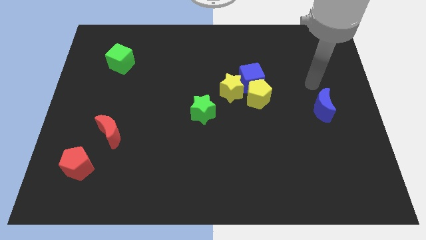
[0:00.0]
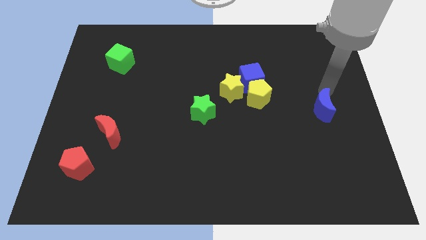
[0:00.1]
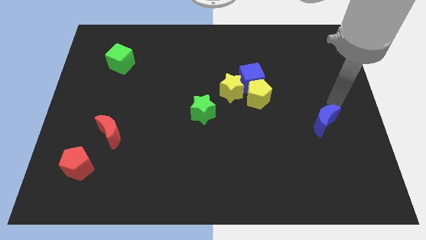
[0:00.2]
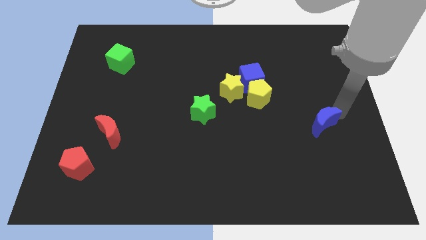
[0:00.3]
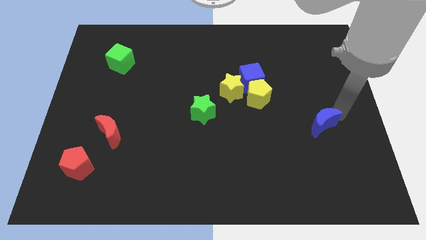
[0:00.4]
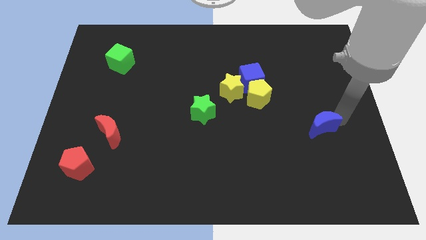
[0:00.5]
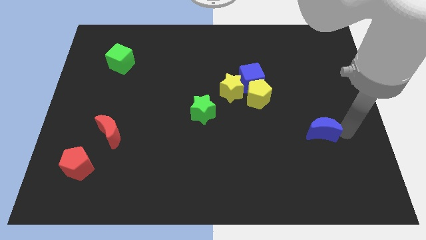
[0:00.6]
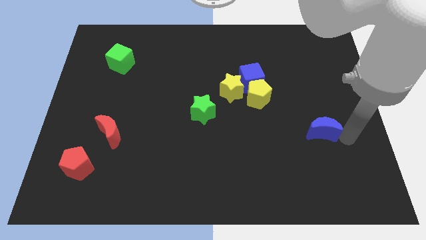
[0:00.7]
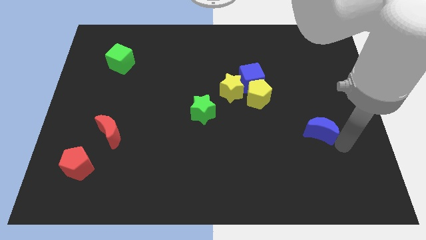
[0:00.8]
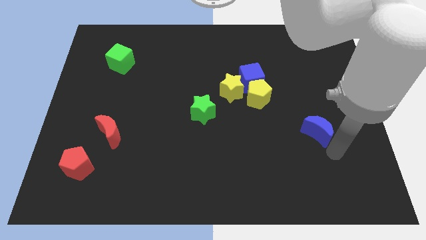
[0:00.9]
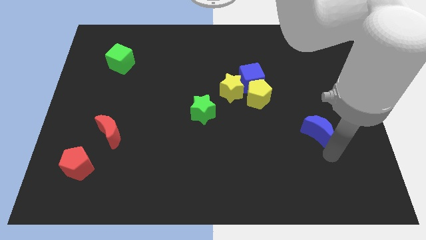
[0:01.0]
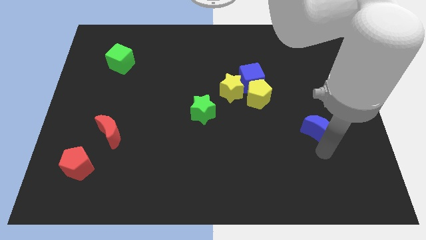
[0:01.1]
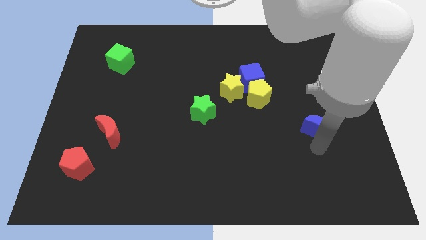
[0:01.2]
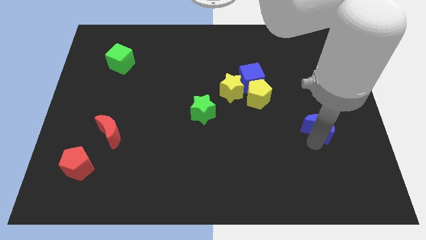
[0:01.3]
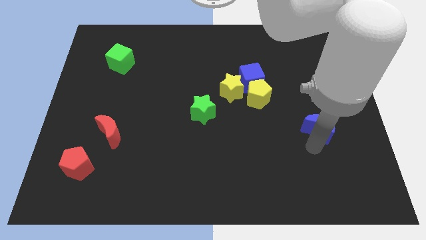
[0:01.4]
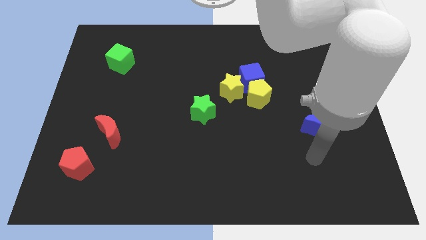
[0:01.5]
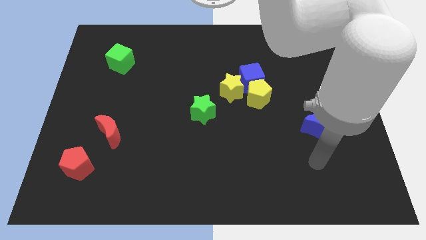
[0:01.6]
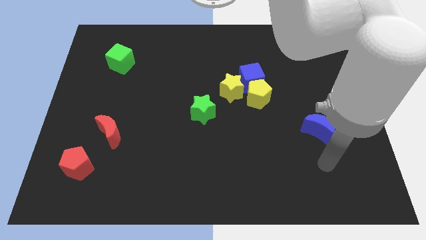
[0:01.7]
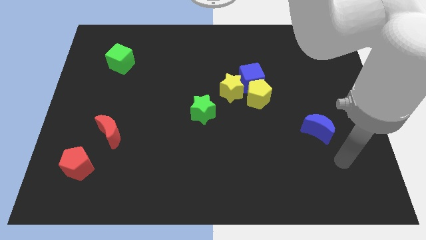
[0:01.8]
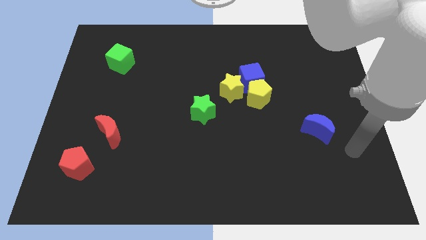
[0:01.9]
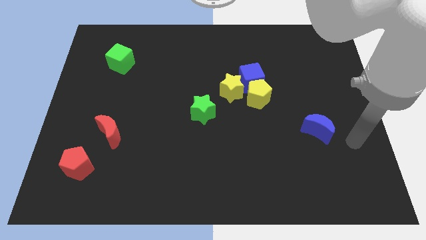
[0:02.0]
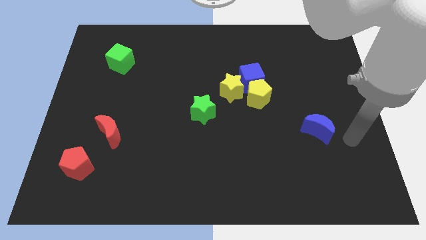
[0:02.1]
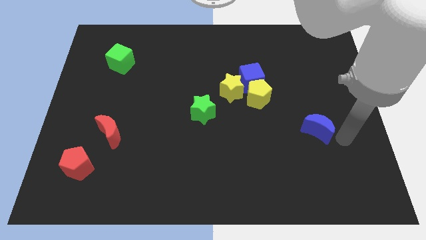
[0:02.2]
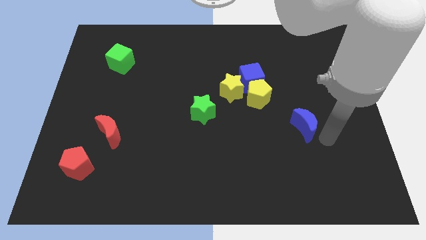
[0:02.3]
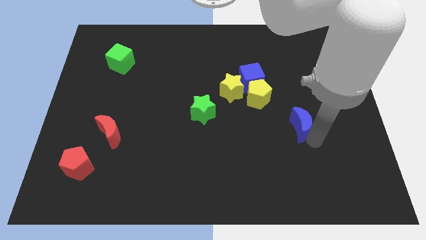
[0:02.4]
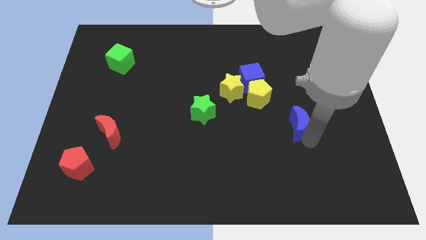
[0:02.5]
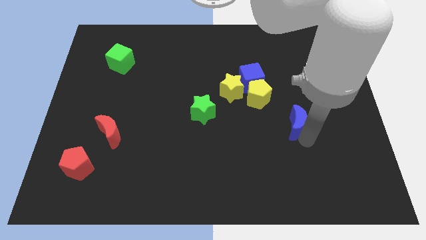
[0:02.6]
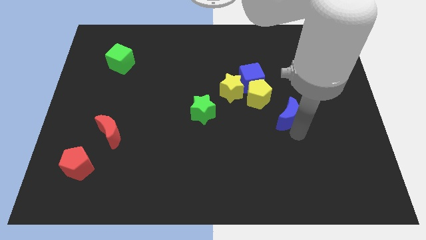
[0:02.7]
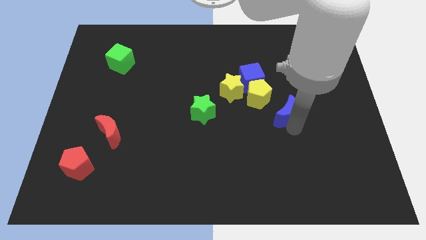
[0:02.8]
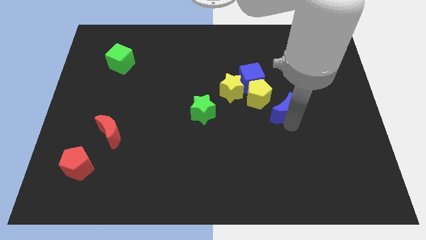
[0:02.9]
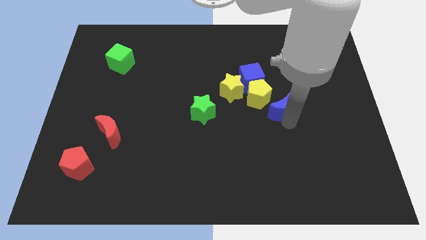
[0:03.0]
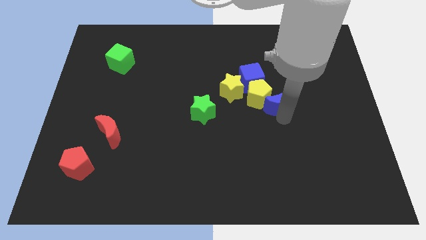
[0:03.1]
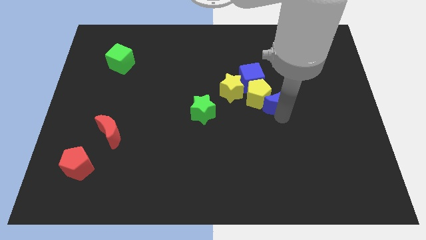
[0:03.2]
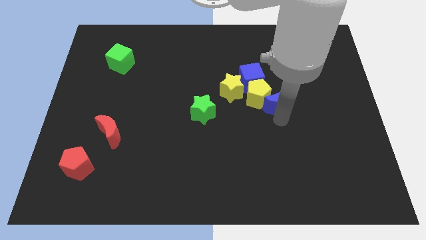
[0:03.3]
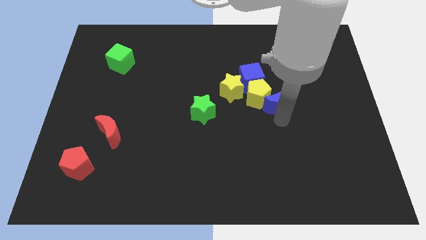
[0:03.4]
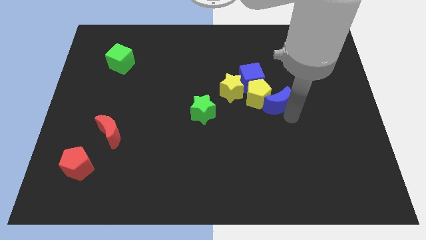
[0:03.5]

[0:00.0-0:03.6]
slide the blue crescent into the yellow pentagon

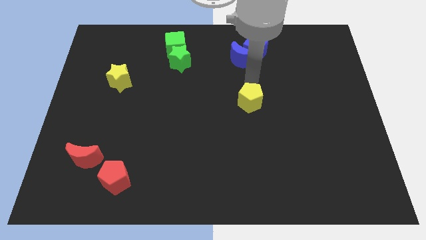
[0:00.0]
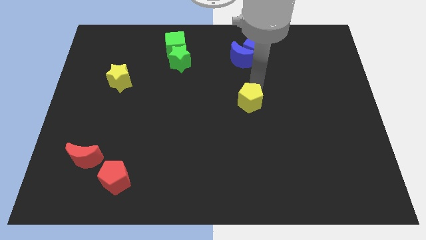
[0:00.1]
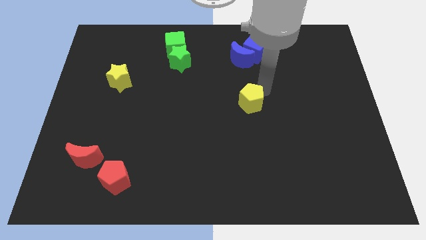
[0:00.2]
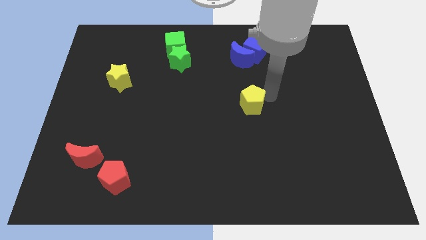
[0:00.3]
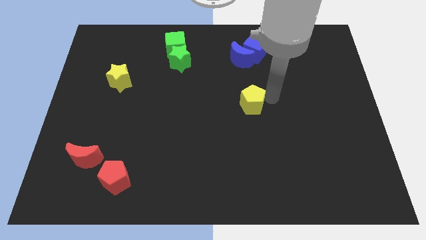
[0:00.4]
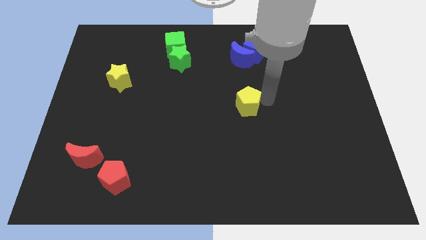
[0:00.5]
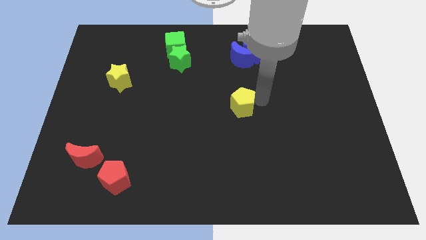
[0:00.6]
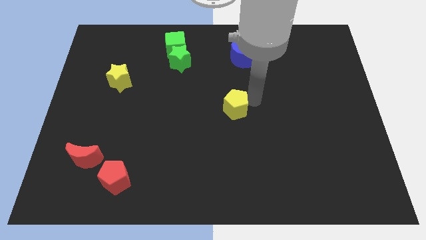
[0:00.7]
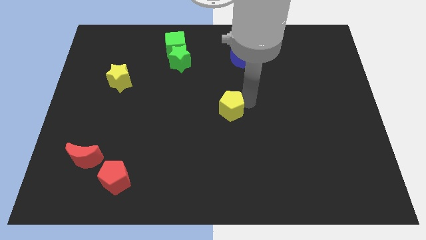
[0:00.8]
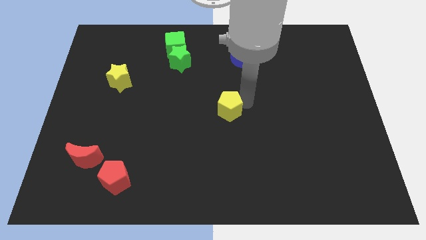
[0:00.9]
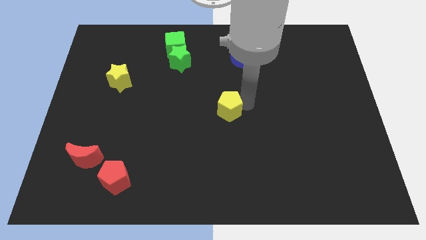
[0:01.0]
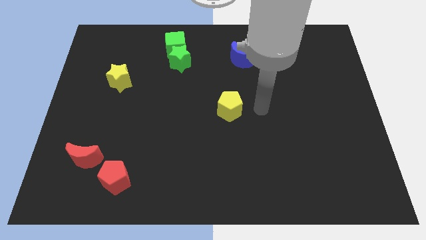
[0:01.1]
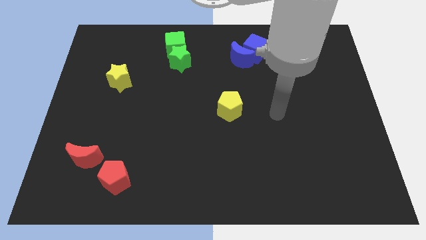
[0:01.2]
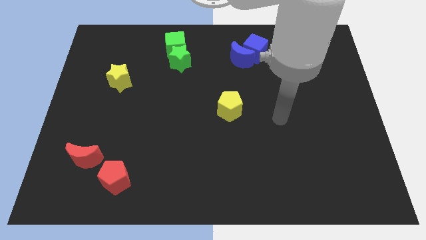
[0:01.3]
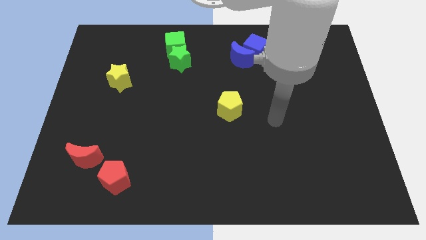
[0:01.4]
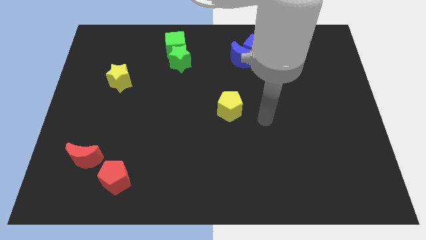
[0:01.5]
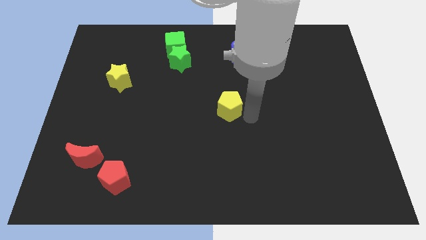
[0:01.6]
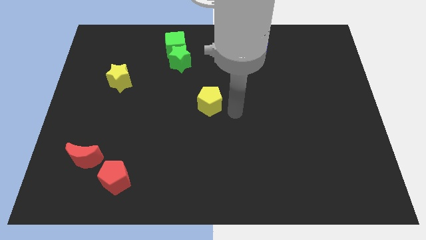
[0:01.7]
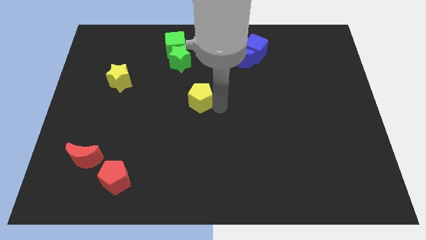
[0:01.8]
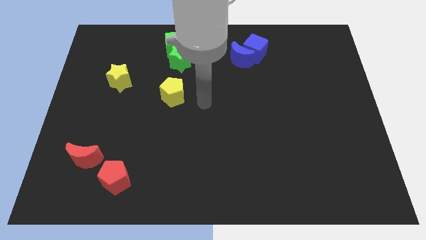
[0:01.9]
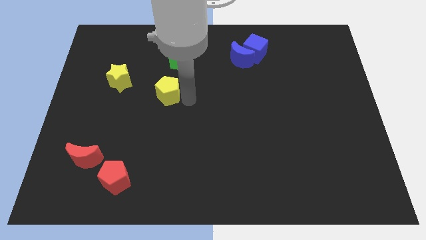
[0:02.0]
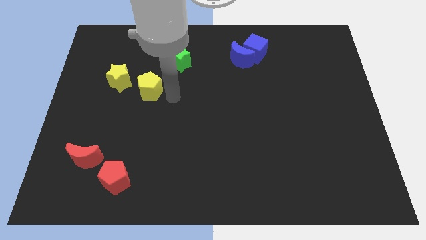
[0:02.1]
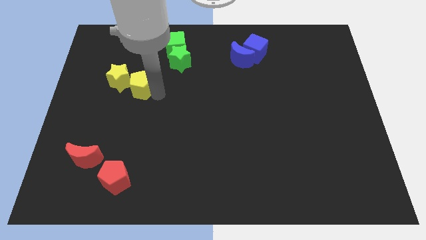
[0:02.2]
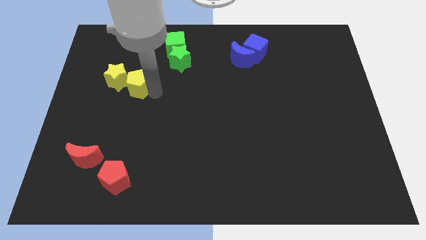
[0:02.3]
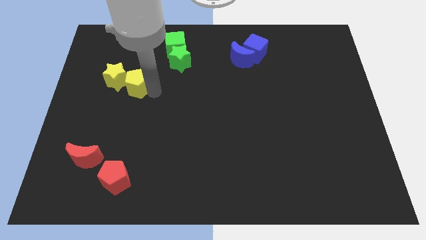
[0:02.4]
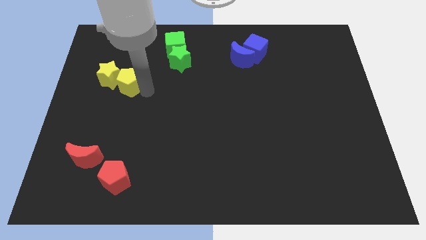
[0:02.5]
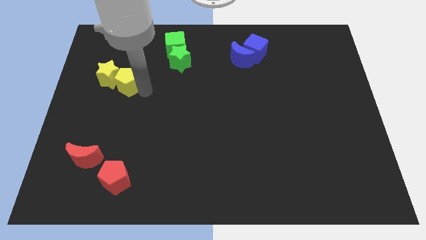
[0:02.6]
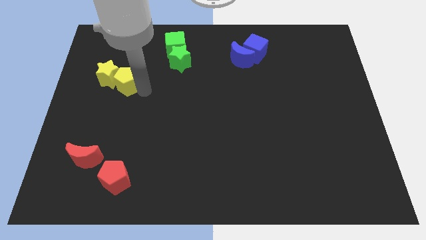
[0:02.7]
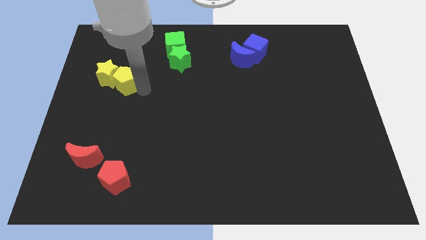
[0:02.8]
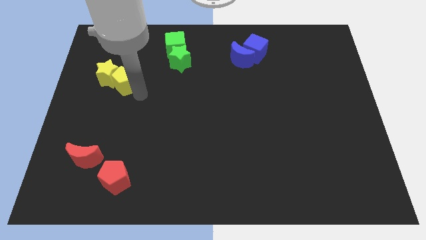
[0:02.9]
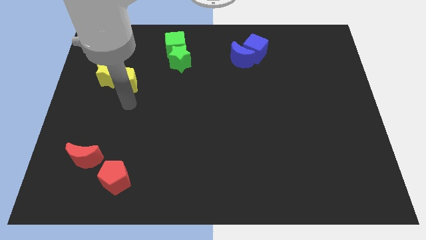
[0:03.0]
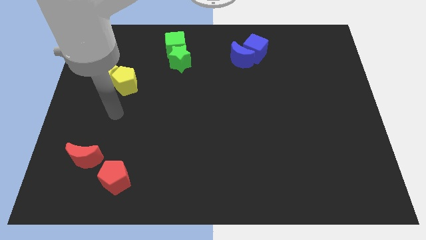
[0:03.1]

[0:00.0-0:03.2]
move yellow pentagon in to yellow star

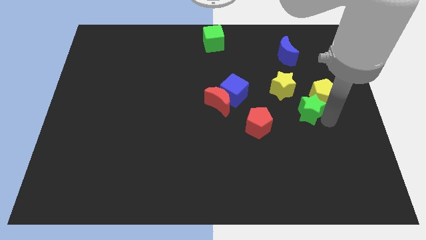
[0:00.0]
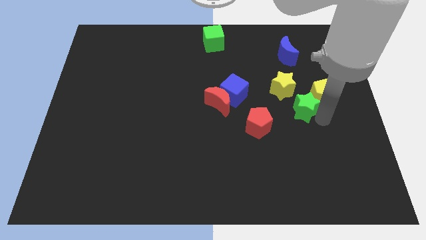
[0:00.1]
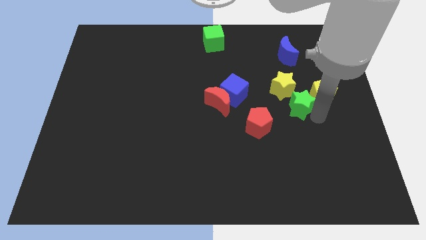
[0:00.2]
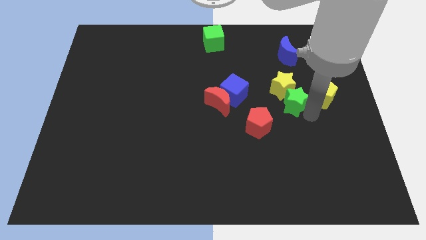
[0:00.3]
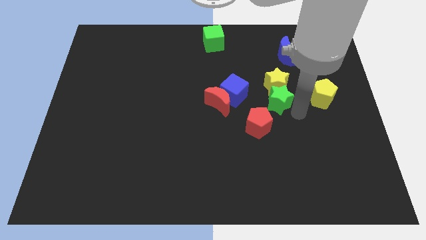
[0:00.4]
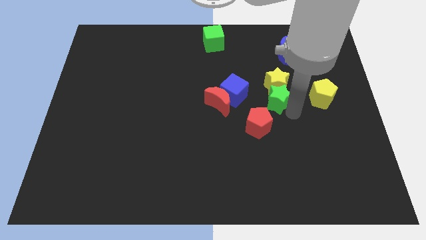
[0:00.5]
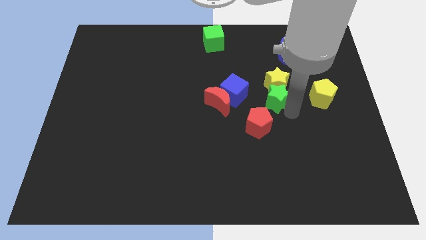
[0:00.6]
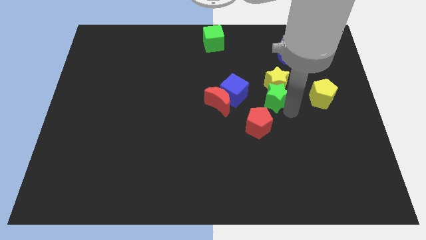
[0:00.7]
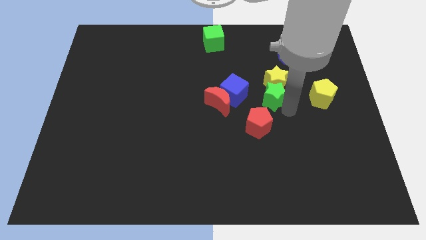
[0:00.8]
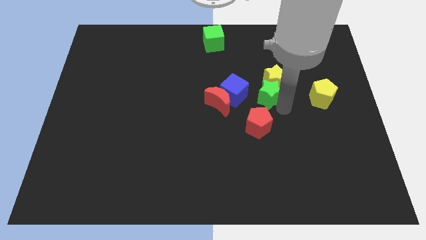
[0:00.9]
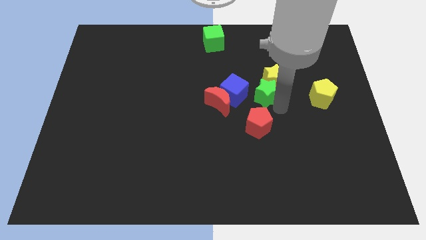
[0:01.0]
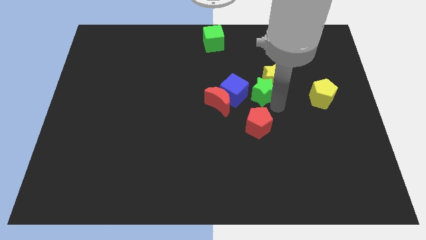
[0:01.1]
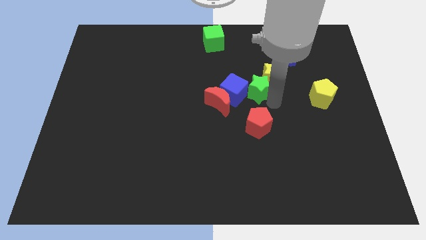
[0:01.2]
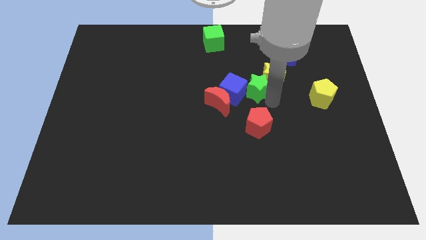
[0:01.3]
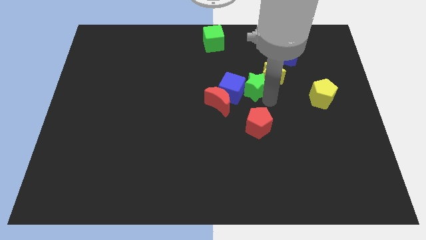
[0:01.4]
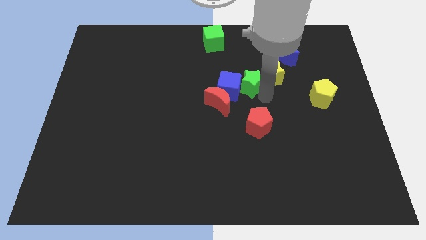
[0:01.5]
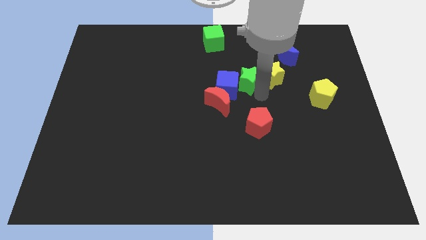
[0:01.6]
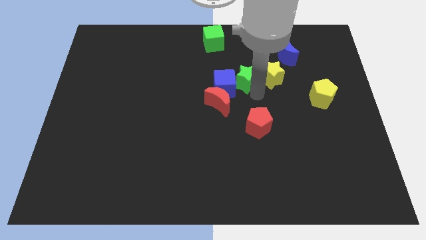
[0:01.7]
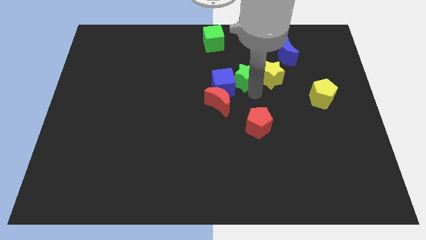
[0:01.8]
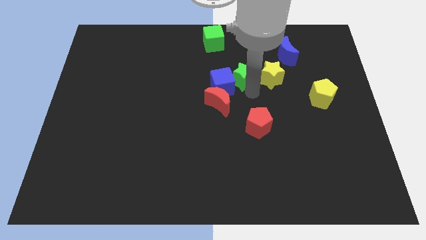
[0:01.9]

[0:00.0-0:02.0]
place the green star in between blue cube and yellow star

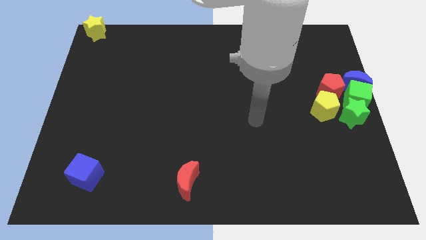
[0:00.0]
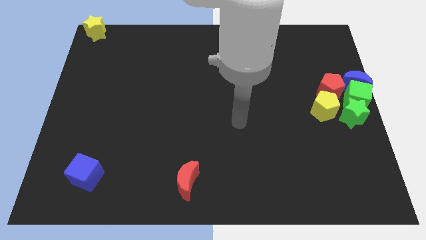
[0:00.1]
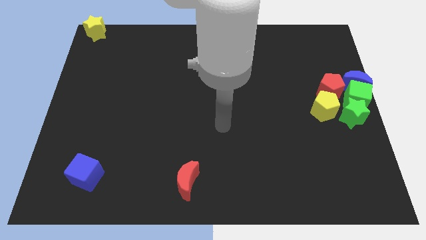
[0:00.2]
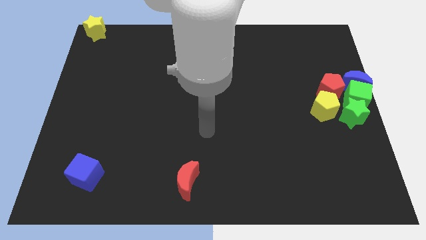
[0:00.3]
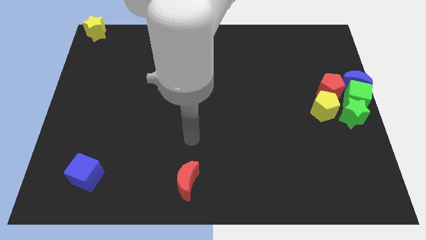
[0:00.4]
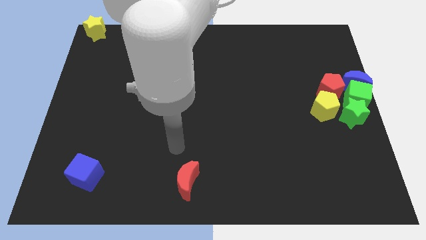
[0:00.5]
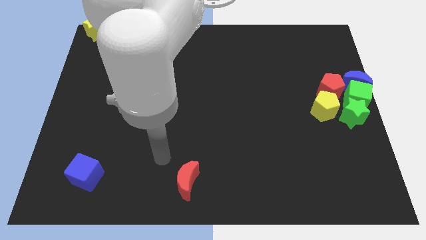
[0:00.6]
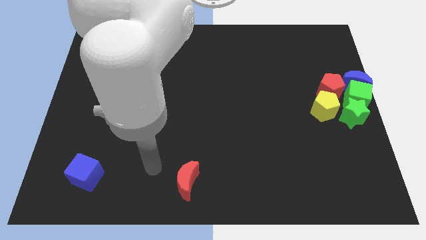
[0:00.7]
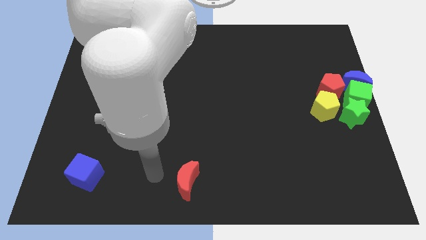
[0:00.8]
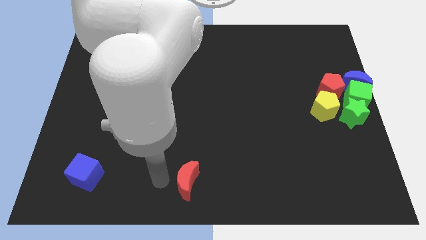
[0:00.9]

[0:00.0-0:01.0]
move the arm left to the red crescent
